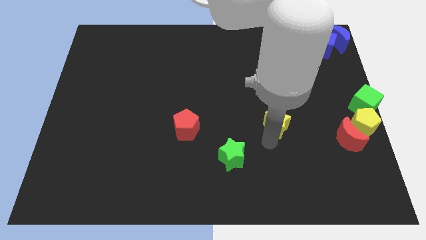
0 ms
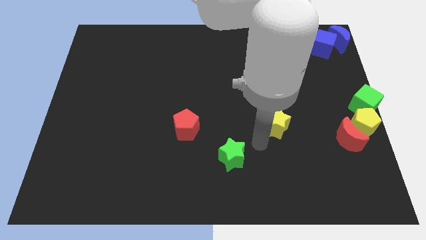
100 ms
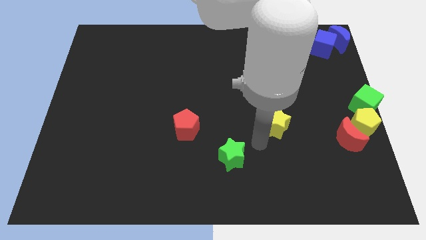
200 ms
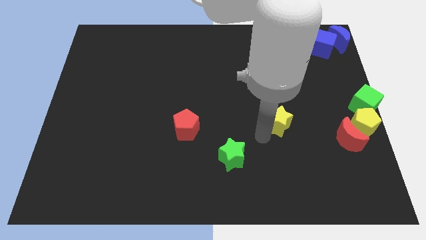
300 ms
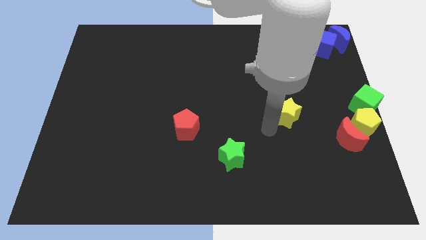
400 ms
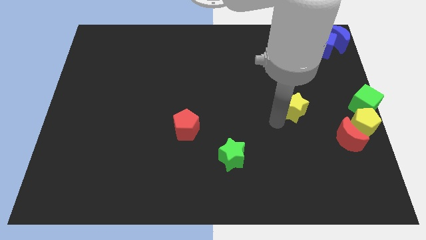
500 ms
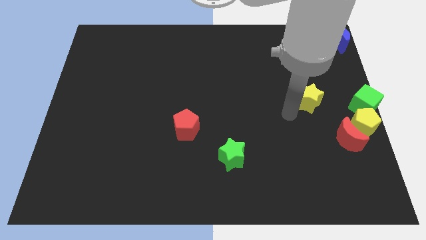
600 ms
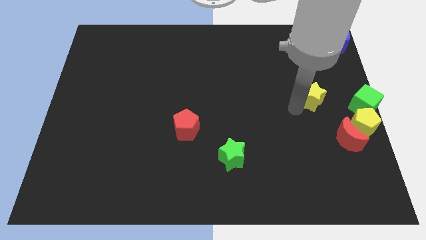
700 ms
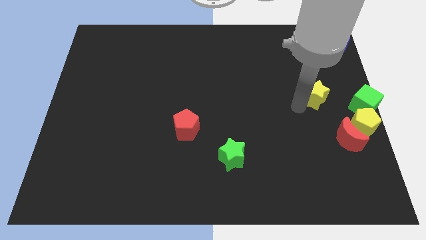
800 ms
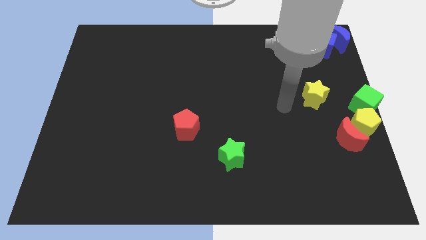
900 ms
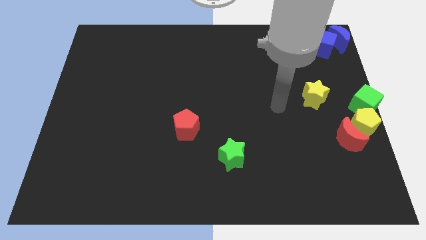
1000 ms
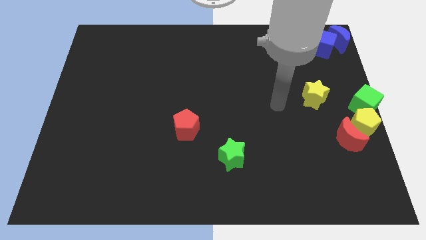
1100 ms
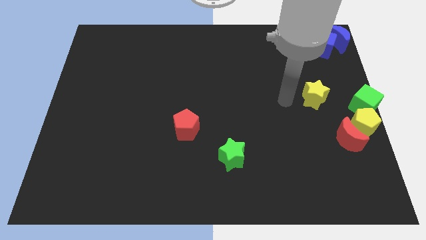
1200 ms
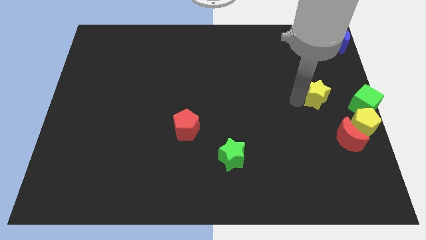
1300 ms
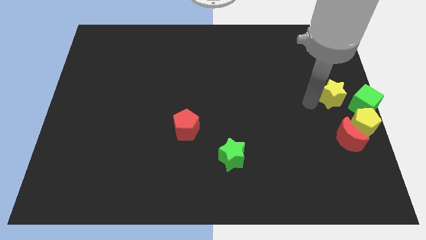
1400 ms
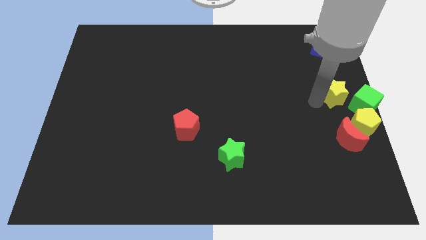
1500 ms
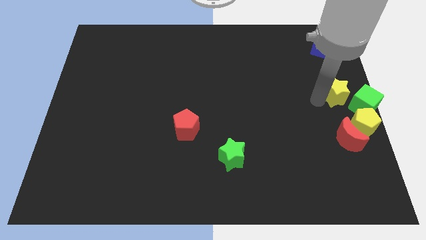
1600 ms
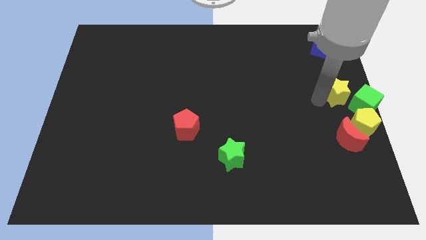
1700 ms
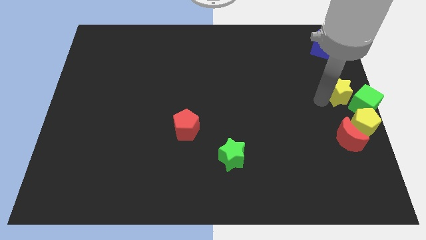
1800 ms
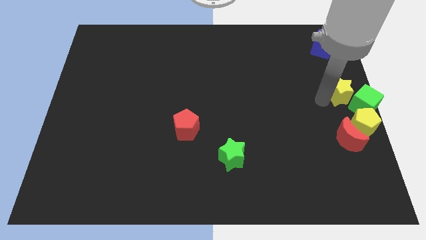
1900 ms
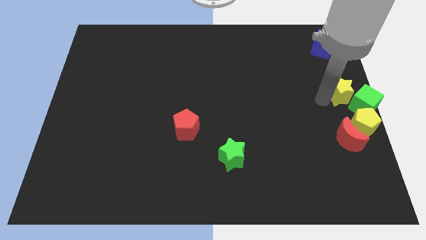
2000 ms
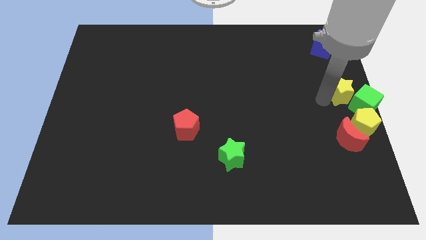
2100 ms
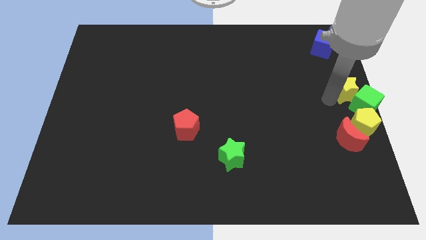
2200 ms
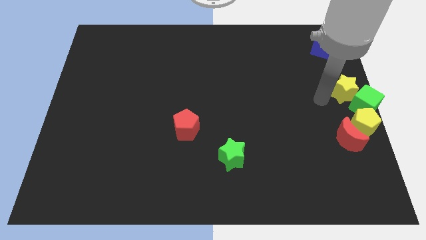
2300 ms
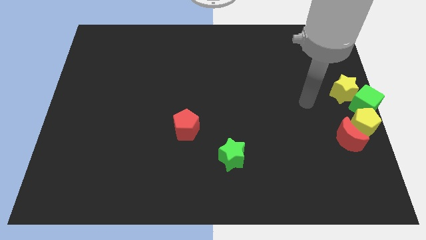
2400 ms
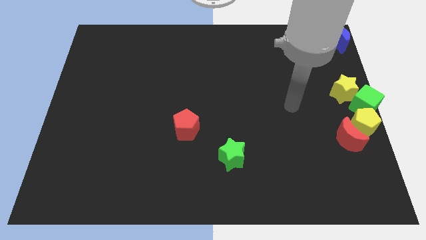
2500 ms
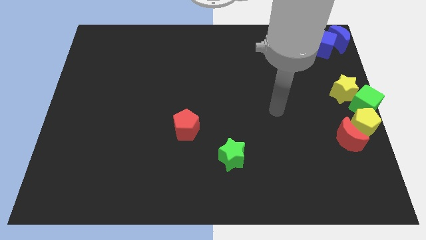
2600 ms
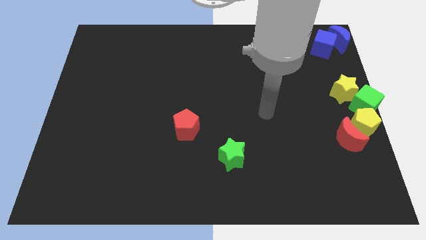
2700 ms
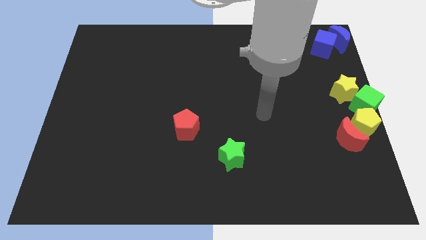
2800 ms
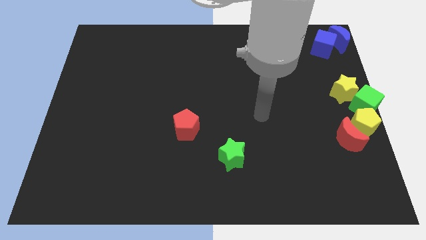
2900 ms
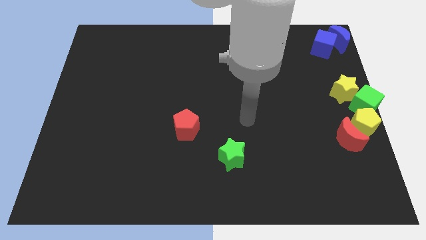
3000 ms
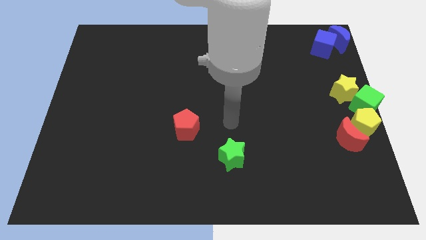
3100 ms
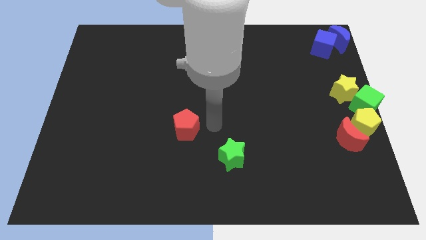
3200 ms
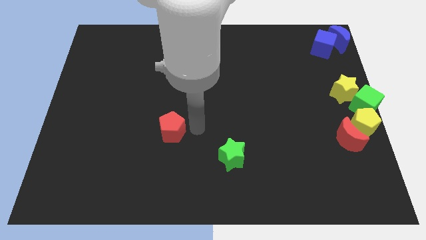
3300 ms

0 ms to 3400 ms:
move the yellow star to the top left side of the green cube

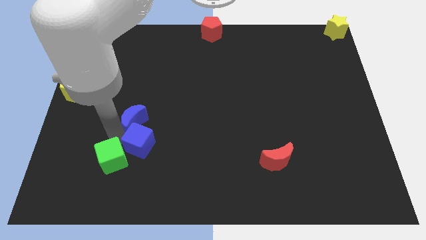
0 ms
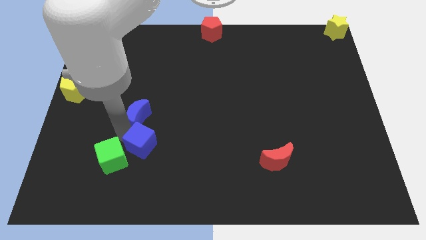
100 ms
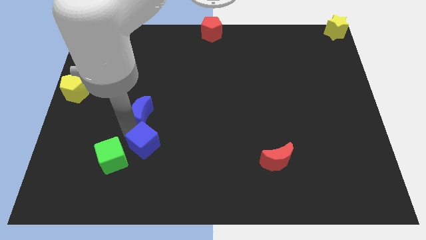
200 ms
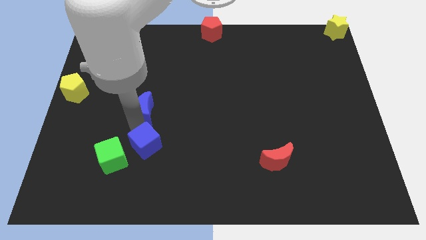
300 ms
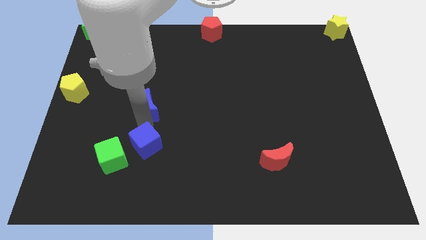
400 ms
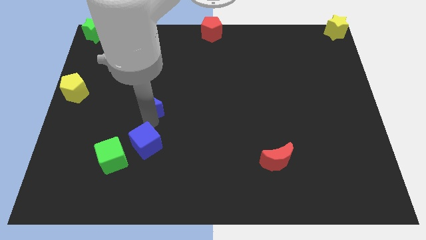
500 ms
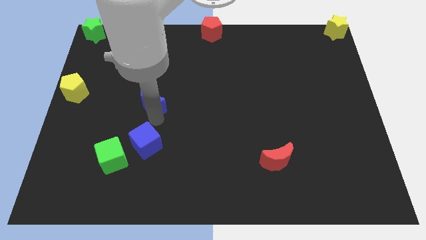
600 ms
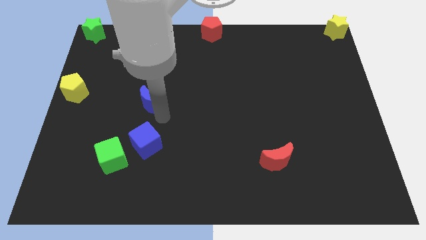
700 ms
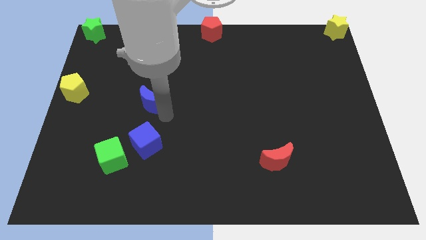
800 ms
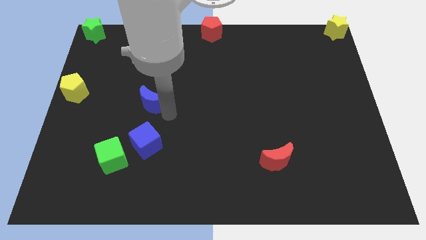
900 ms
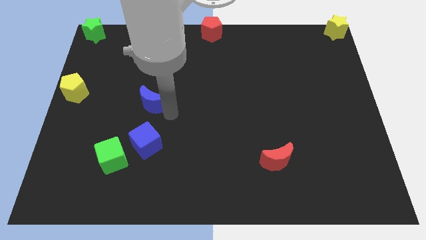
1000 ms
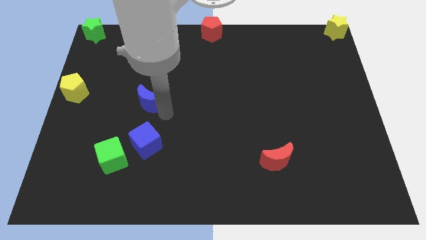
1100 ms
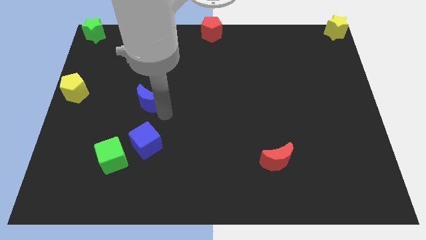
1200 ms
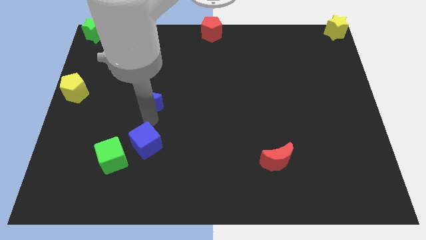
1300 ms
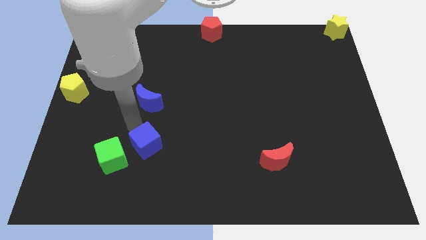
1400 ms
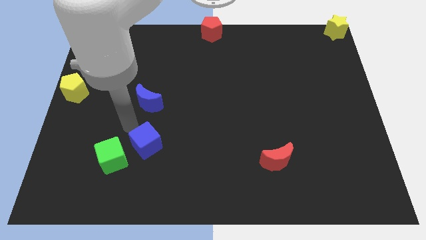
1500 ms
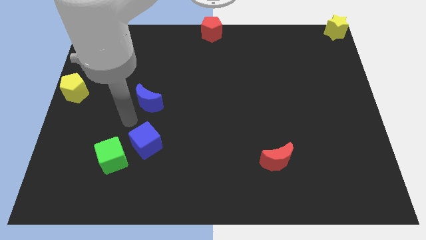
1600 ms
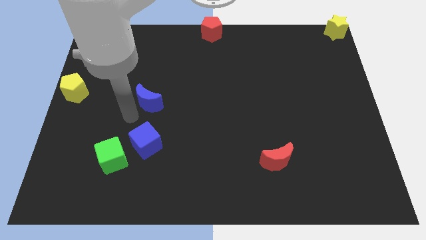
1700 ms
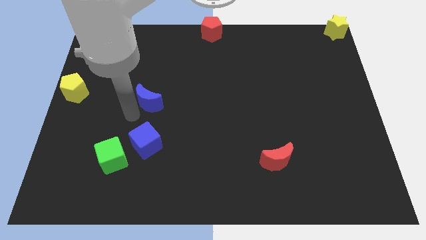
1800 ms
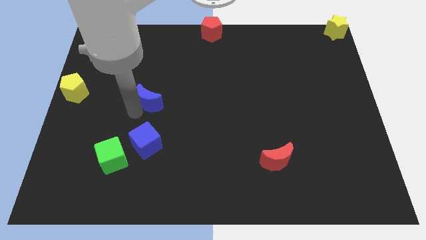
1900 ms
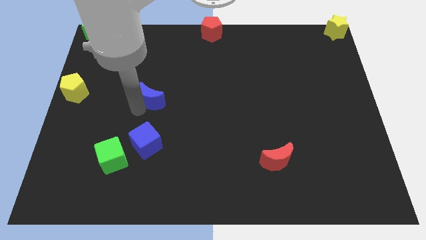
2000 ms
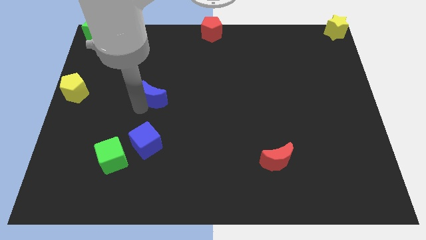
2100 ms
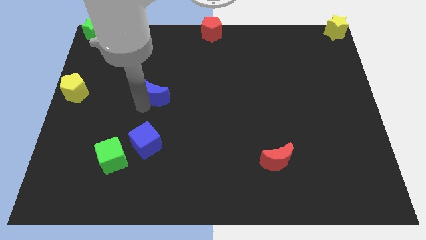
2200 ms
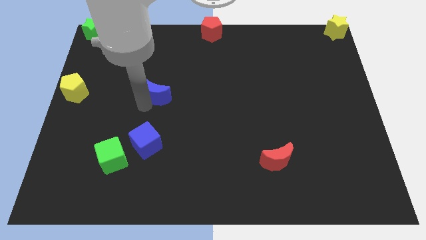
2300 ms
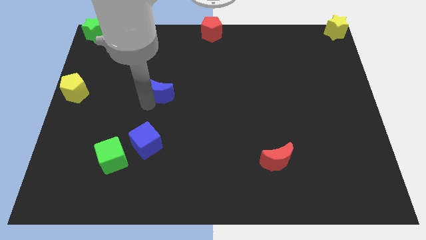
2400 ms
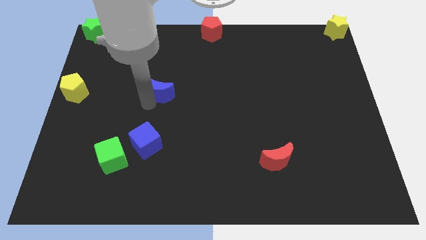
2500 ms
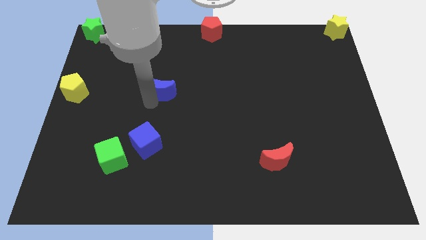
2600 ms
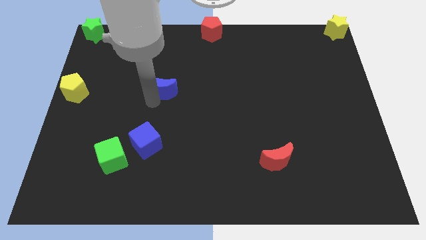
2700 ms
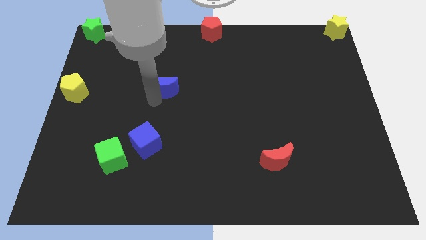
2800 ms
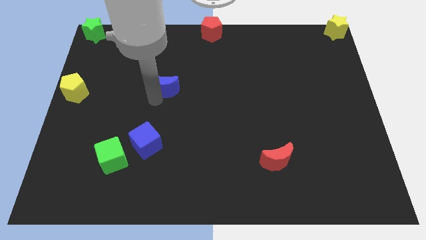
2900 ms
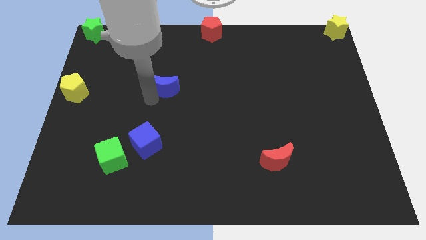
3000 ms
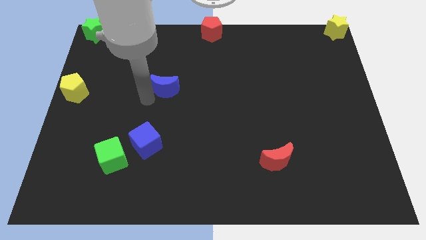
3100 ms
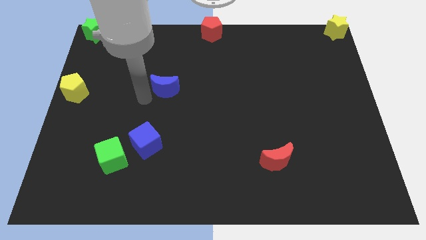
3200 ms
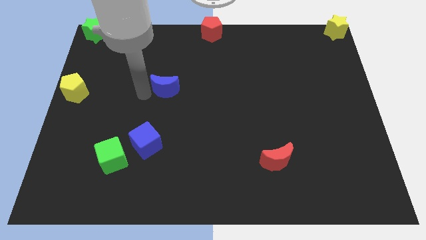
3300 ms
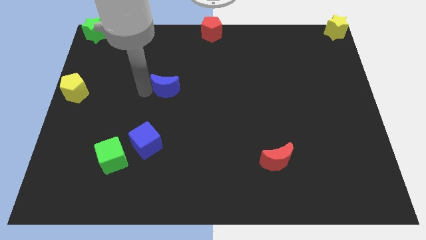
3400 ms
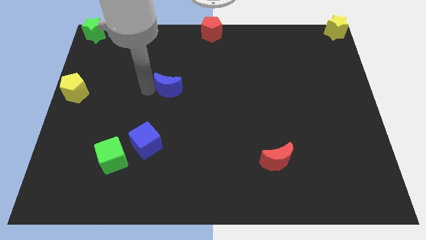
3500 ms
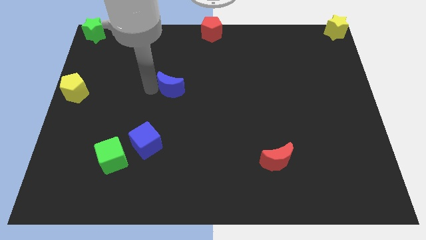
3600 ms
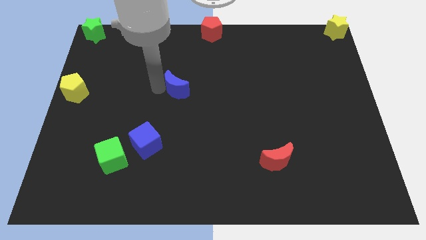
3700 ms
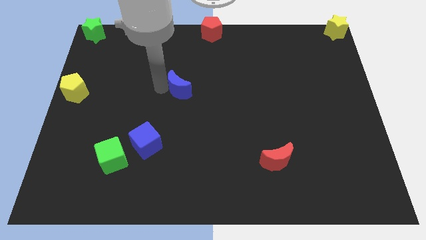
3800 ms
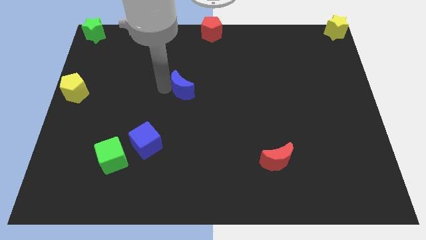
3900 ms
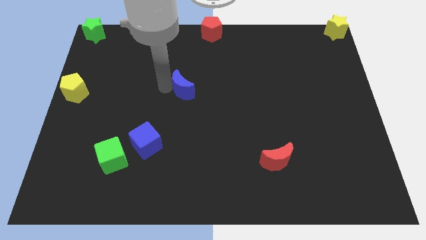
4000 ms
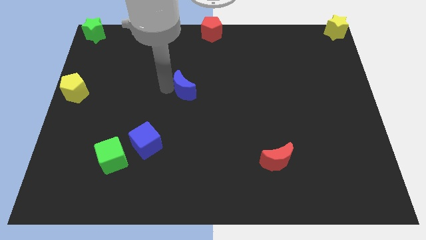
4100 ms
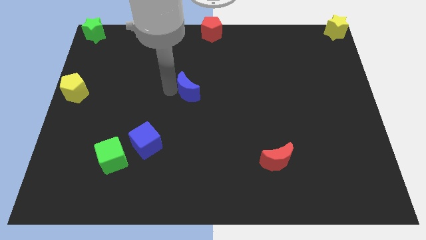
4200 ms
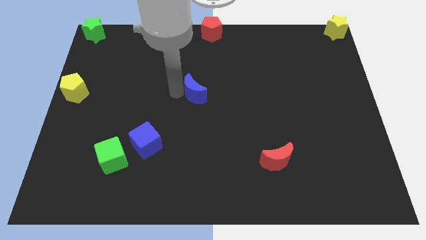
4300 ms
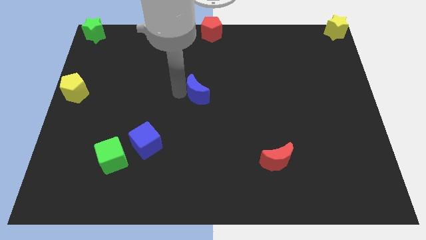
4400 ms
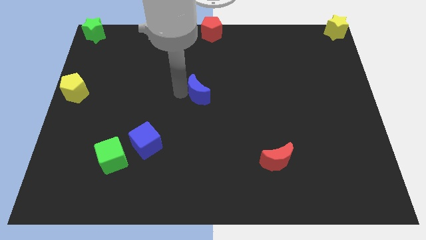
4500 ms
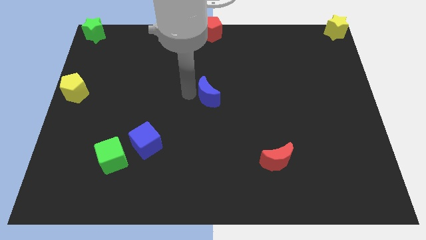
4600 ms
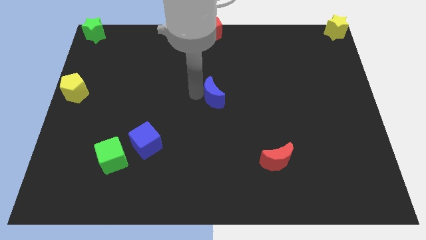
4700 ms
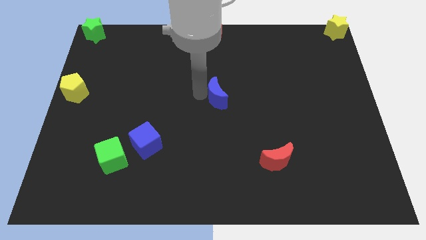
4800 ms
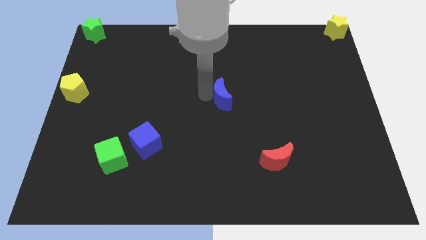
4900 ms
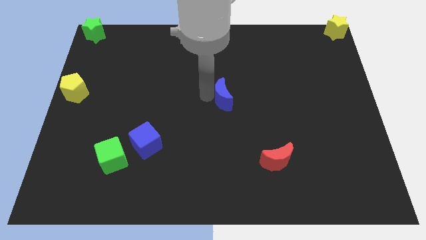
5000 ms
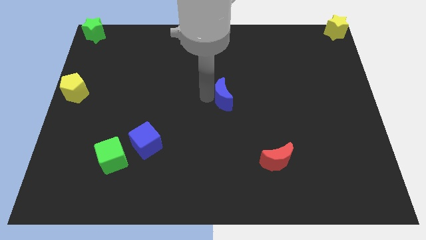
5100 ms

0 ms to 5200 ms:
put the blue moon at the center of the table
